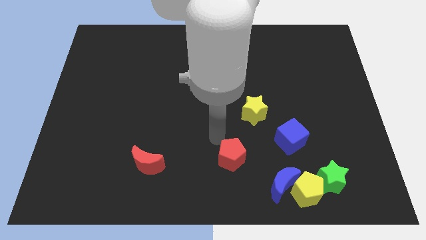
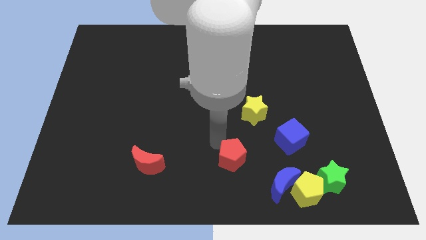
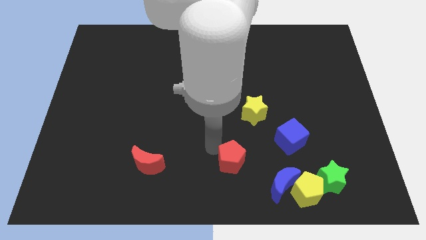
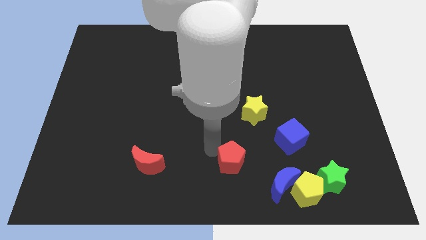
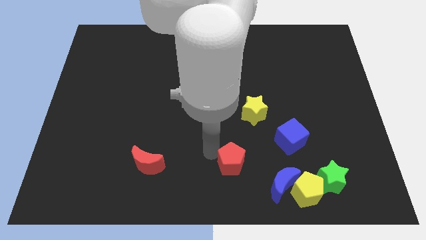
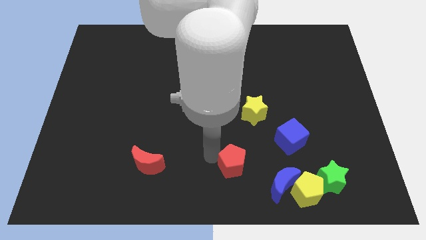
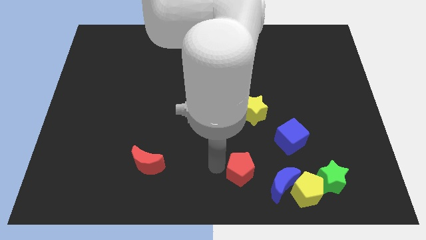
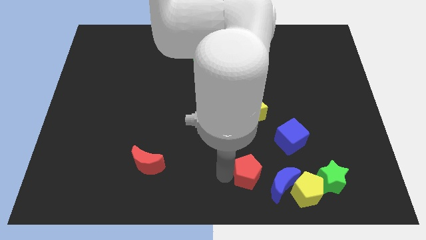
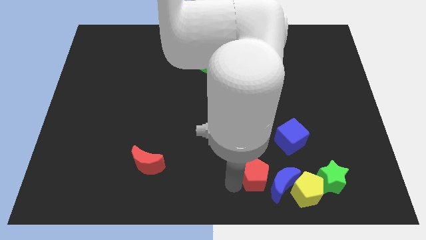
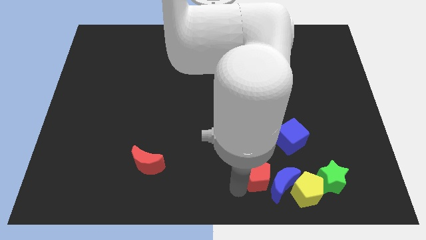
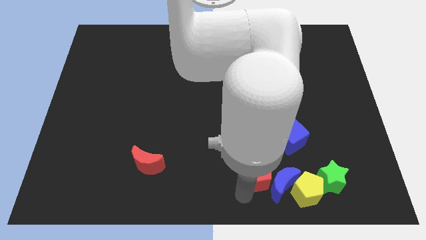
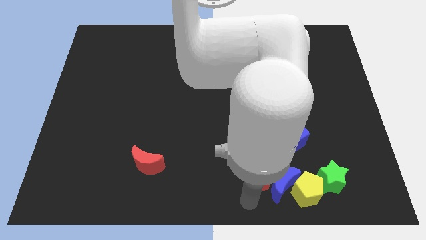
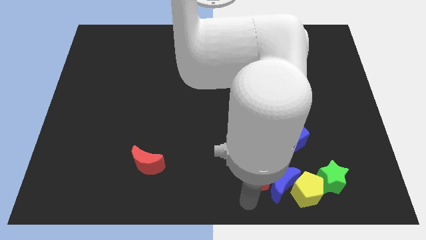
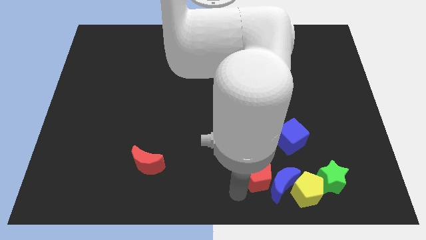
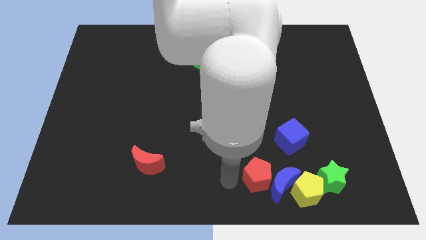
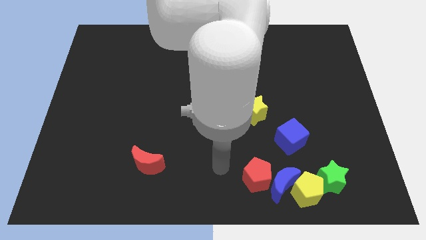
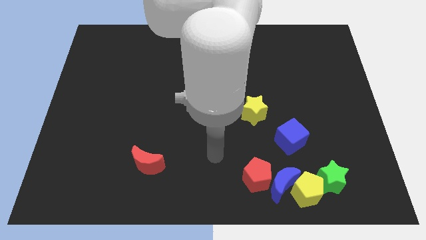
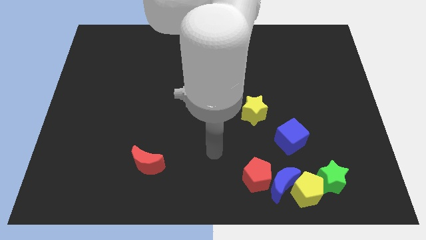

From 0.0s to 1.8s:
push the red pentagon parallel left to the blue moon

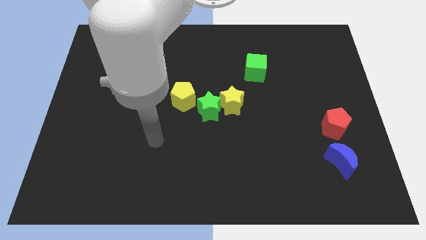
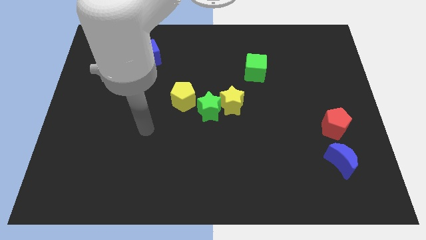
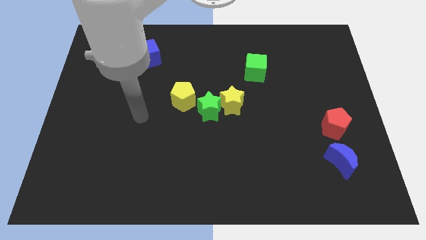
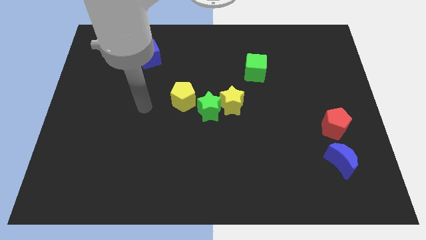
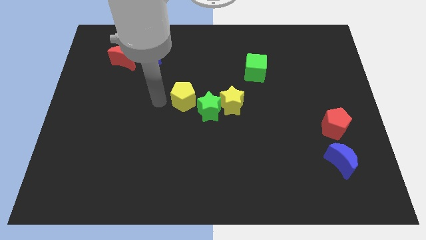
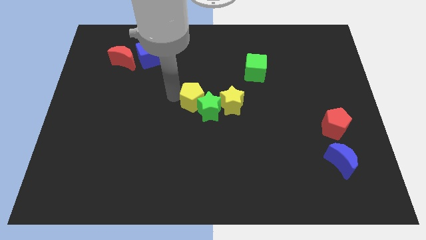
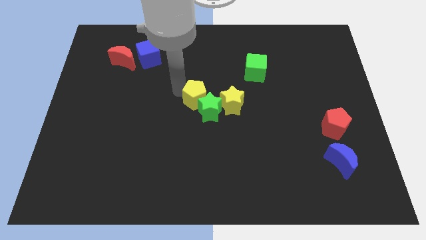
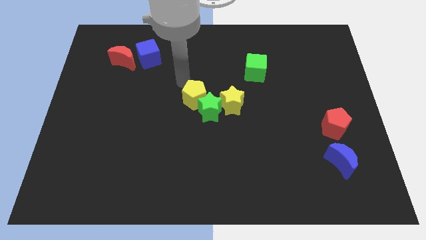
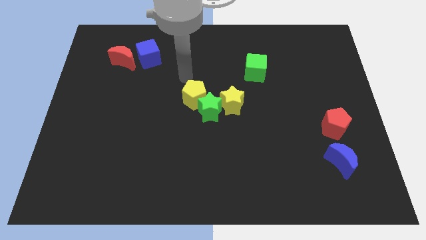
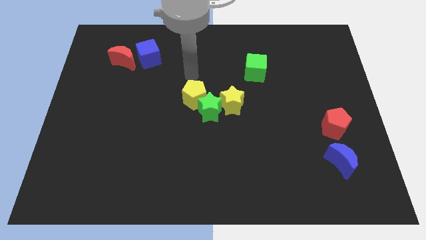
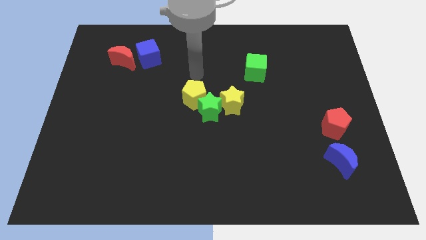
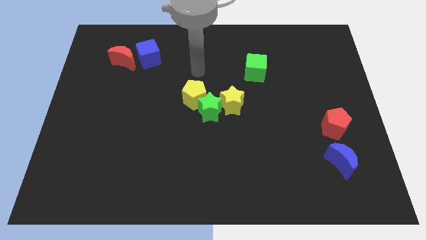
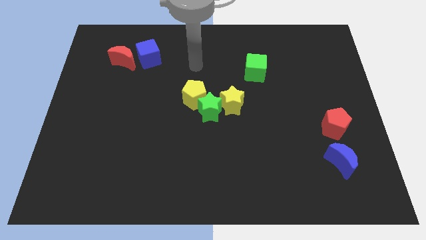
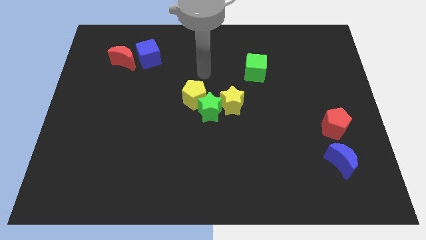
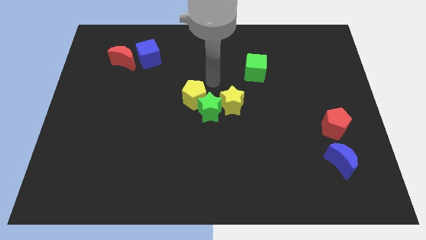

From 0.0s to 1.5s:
slightly push the yellow pentagon

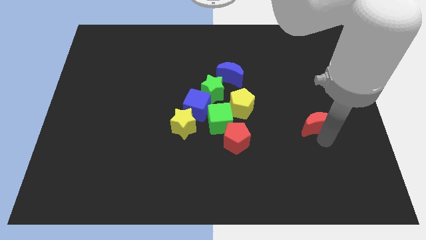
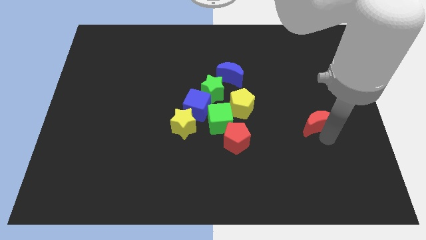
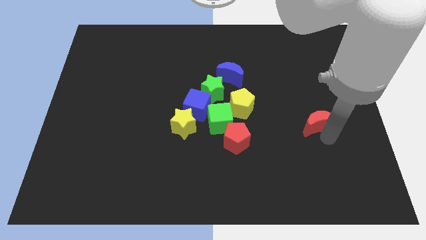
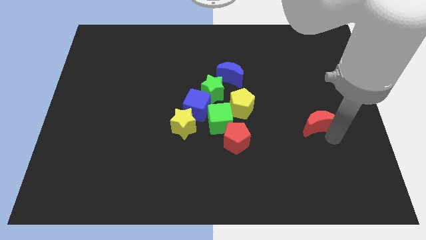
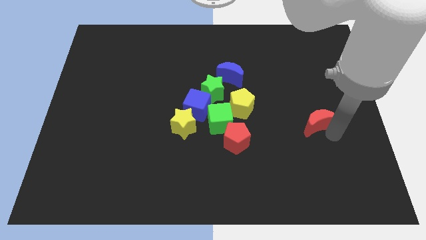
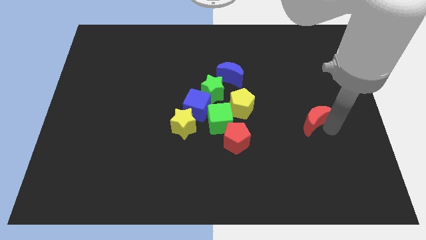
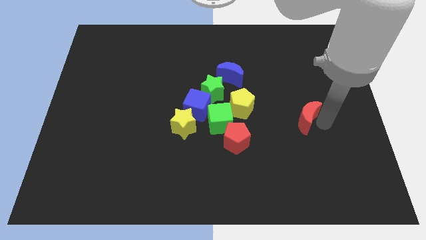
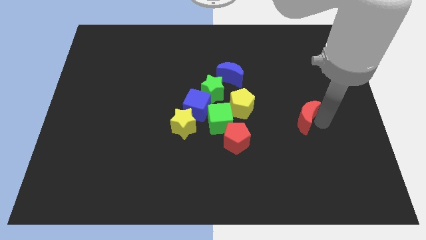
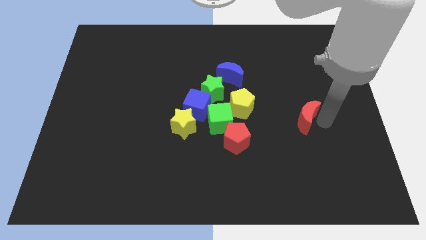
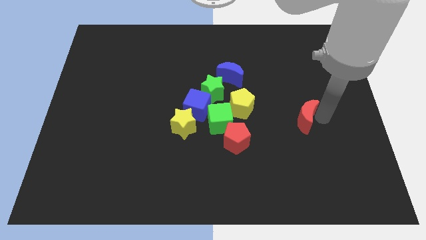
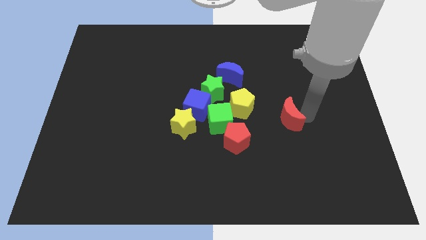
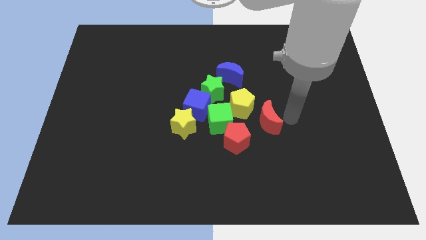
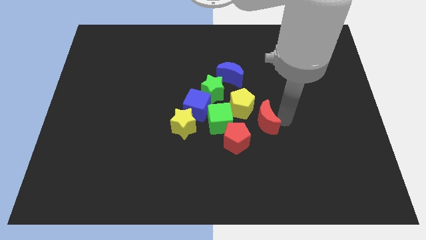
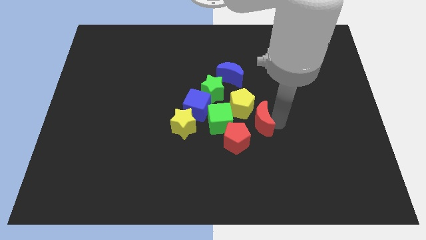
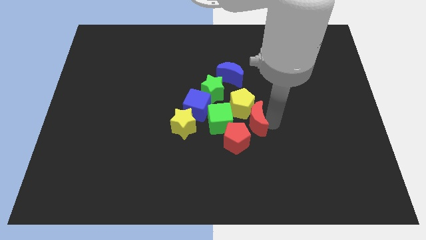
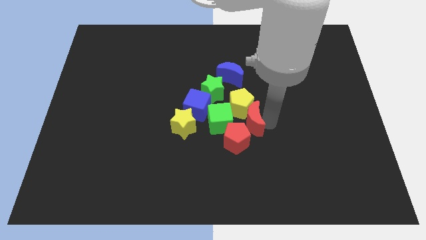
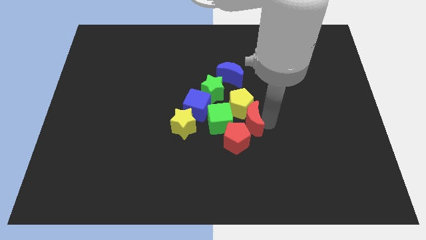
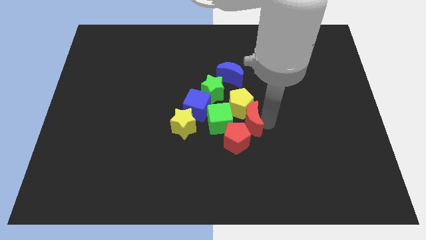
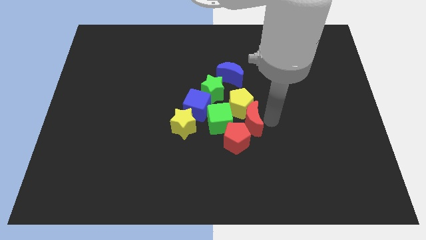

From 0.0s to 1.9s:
drag the red moon close to the group of blocks

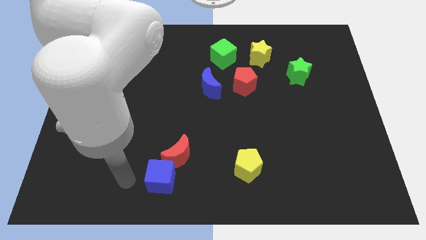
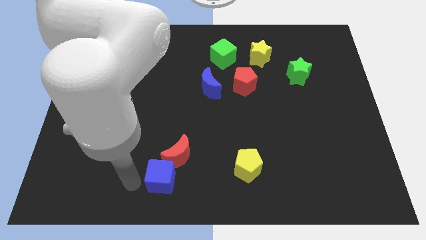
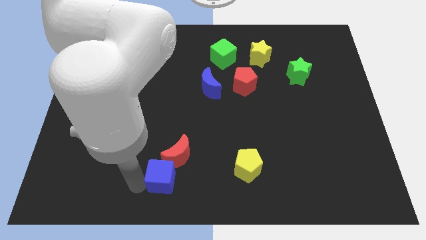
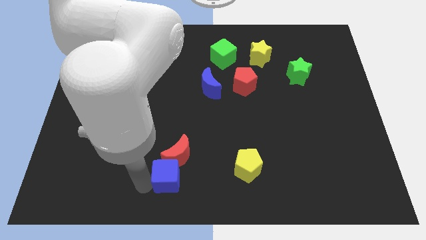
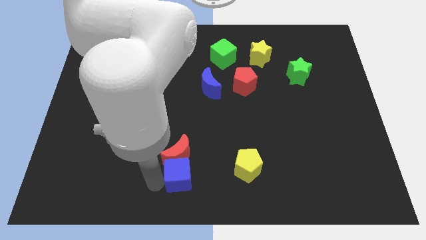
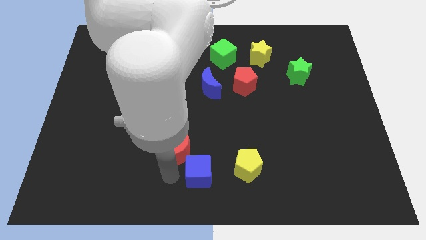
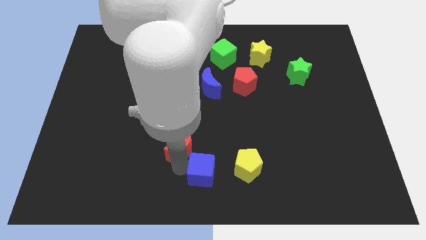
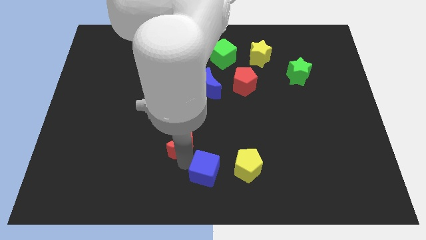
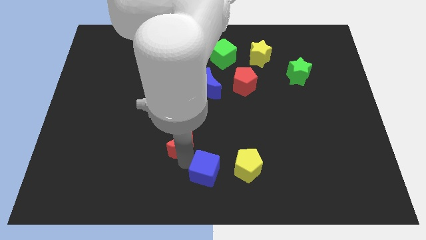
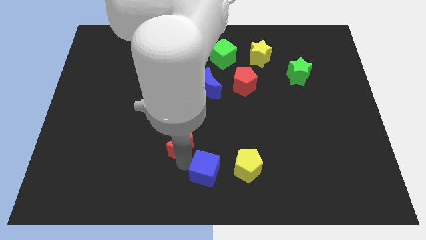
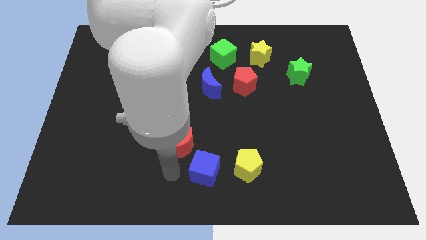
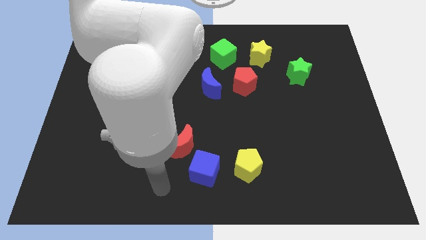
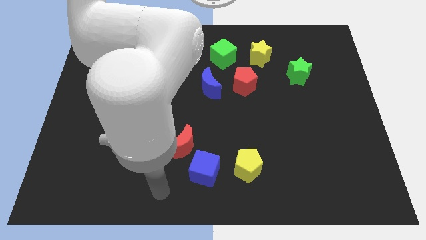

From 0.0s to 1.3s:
move the blue cube to the bottom center

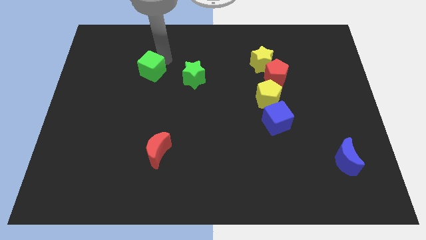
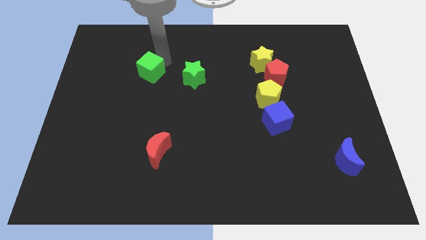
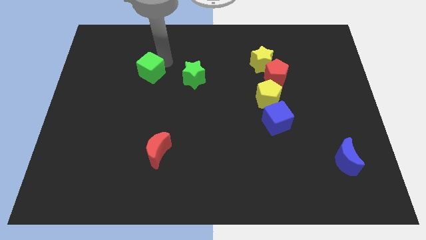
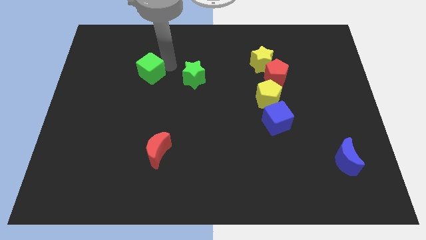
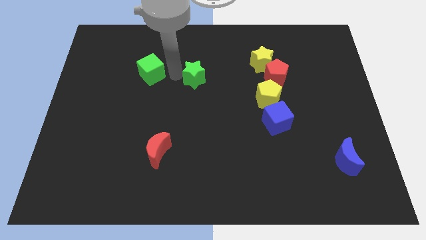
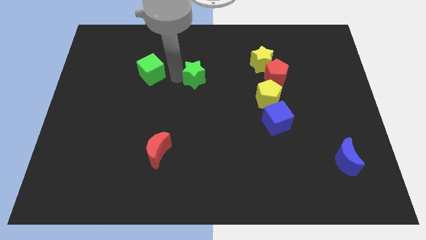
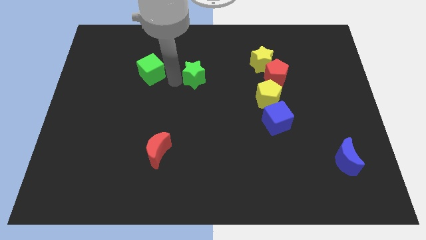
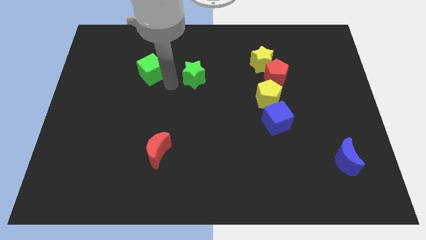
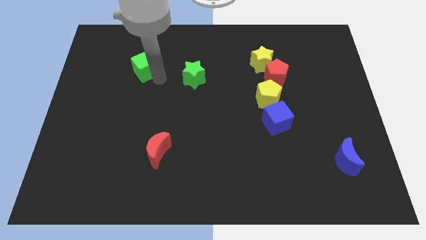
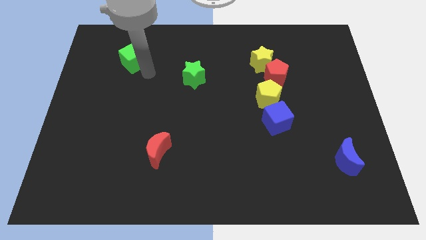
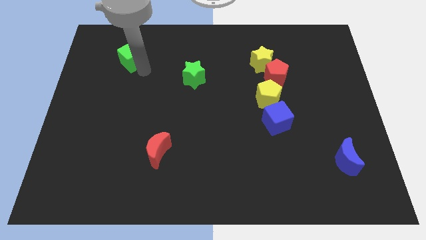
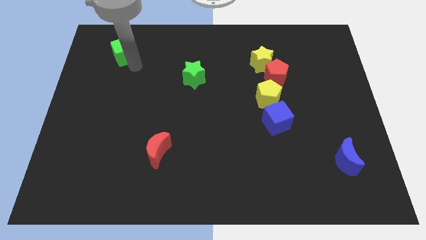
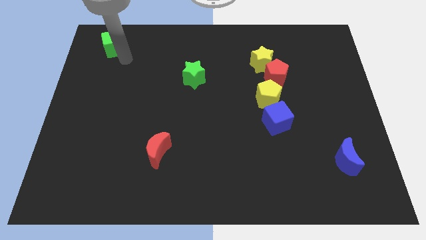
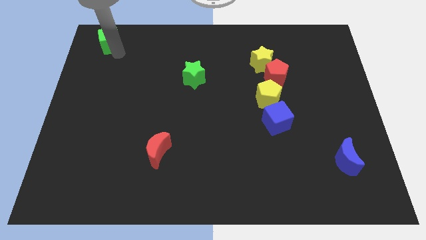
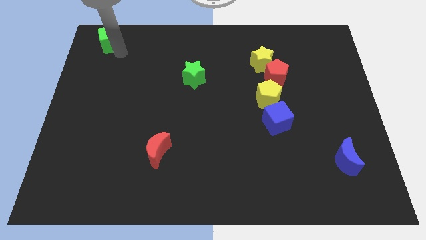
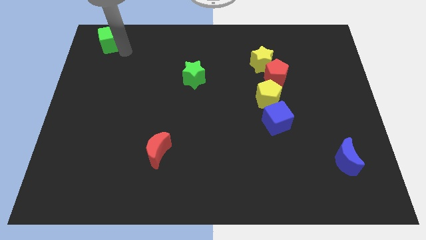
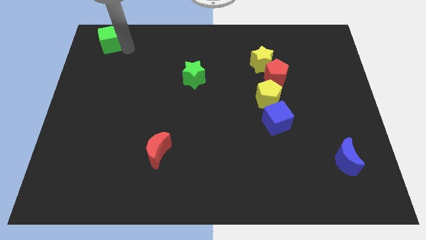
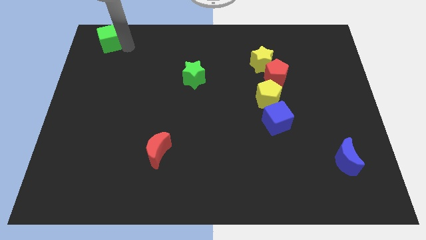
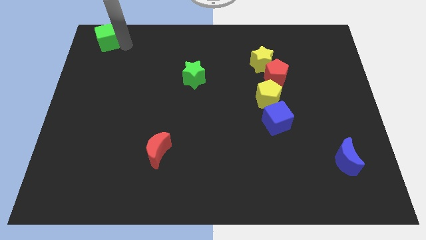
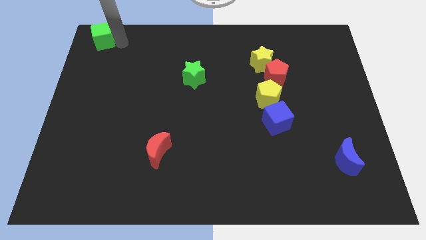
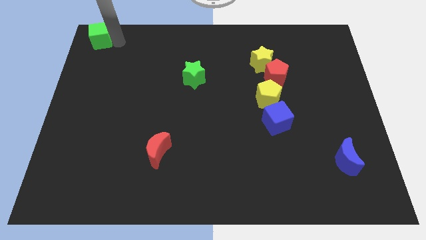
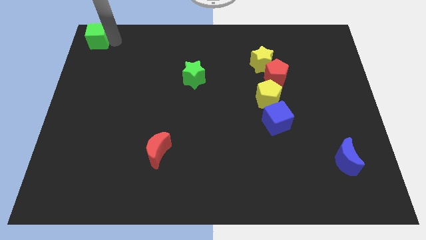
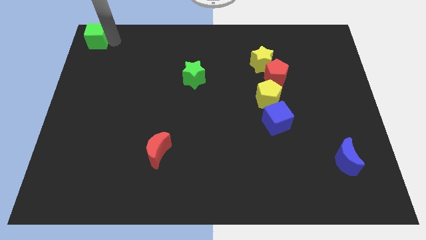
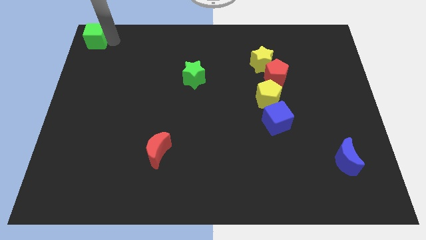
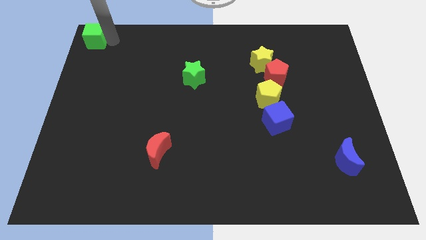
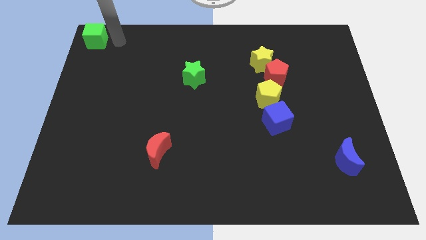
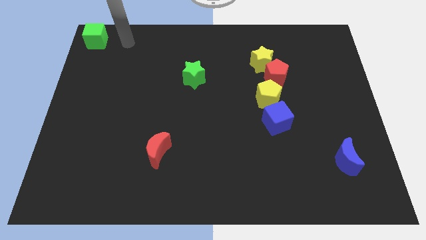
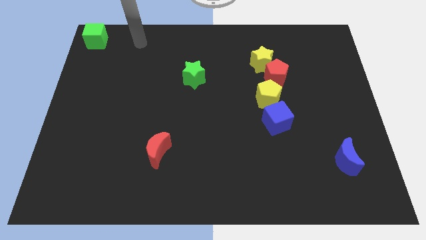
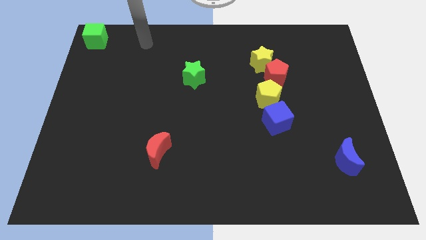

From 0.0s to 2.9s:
move the green cube to the top left of the green star
